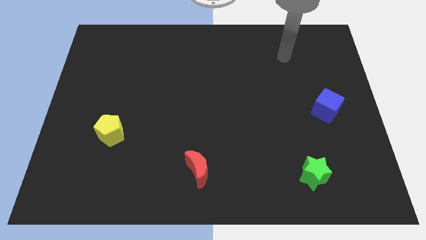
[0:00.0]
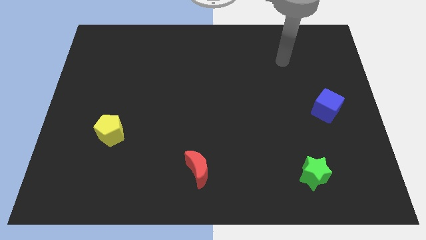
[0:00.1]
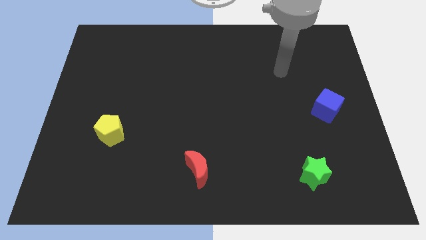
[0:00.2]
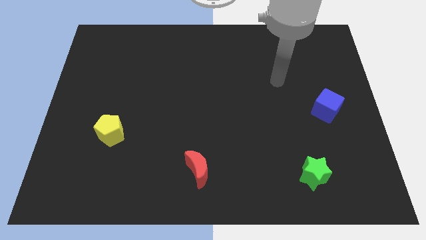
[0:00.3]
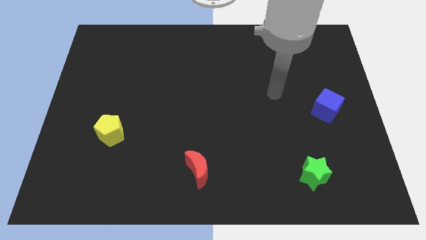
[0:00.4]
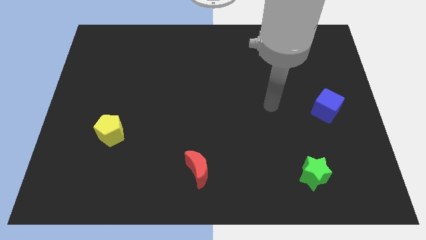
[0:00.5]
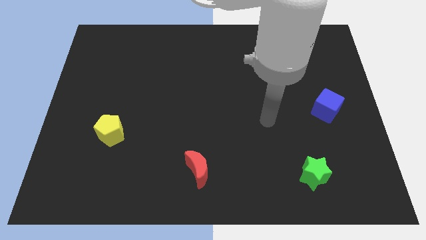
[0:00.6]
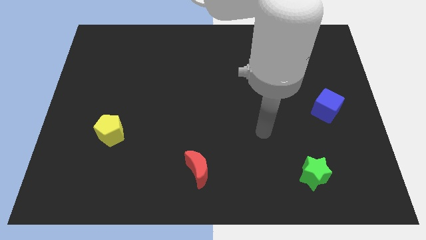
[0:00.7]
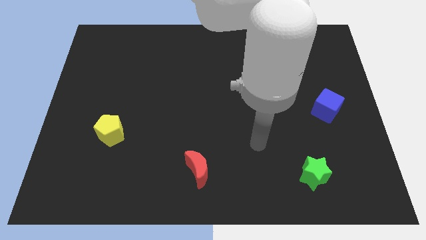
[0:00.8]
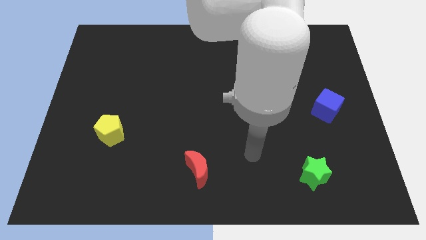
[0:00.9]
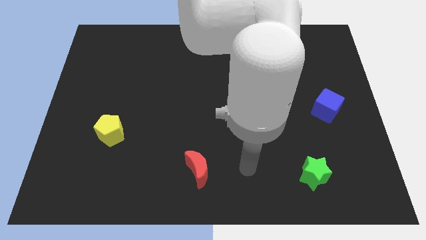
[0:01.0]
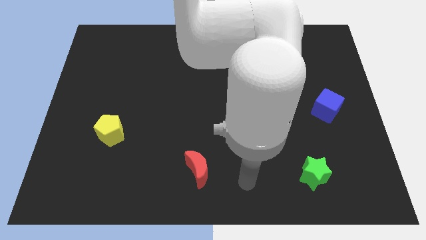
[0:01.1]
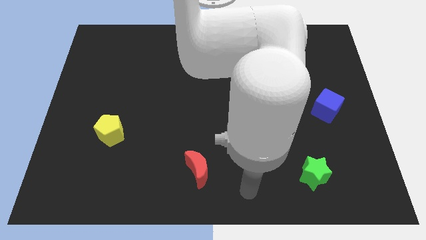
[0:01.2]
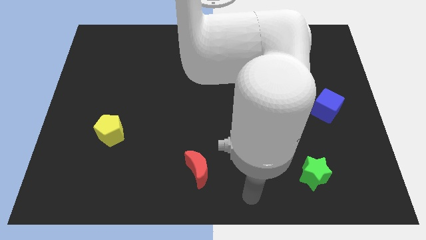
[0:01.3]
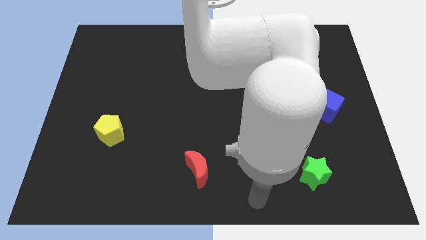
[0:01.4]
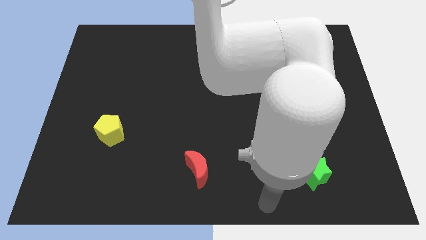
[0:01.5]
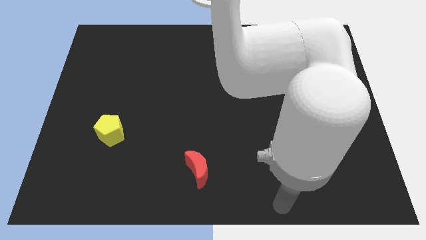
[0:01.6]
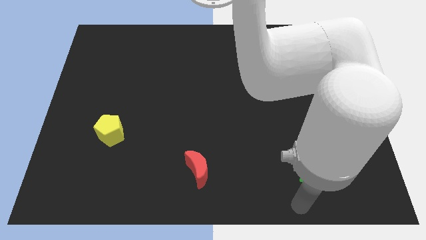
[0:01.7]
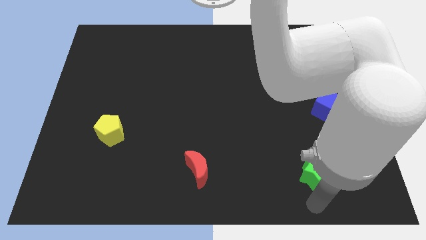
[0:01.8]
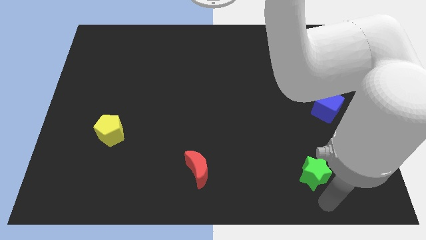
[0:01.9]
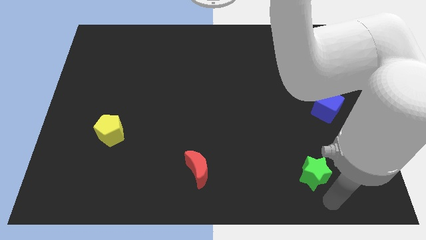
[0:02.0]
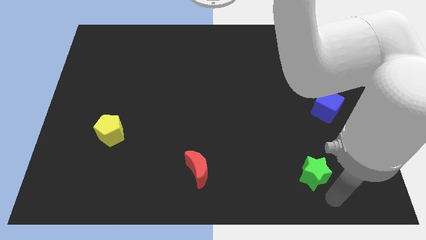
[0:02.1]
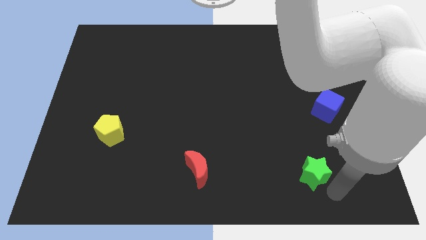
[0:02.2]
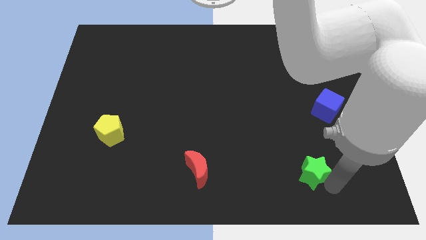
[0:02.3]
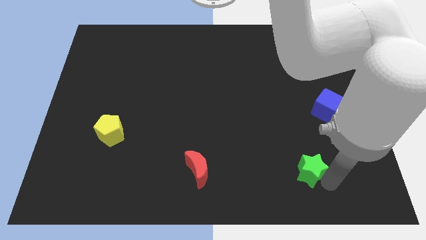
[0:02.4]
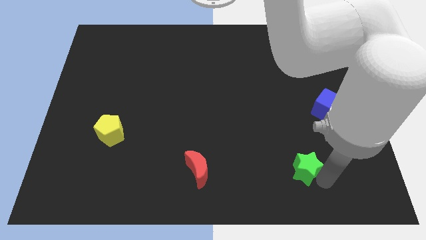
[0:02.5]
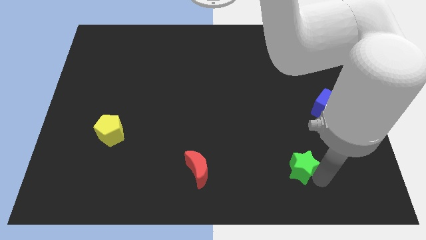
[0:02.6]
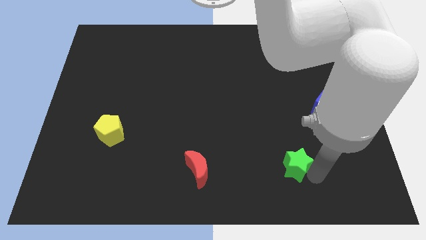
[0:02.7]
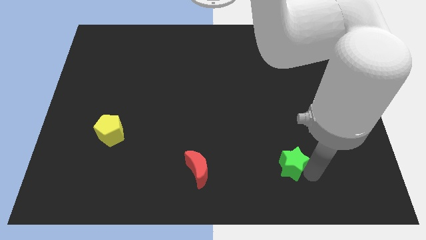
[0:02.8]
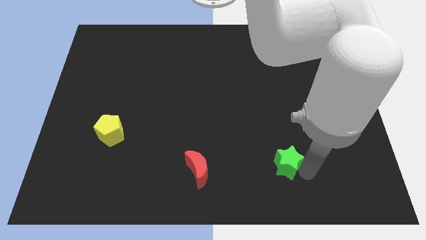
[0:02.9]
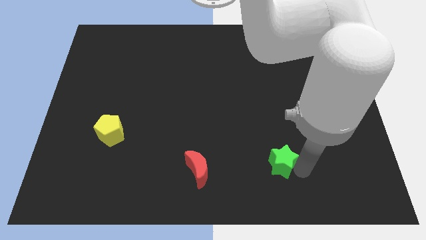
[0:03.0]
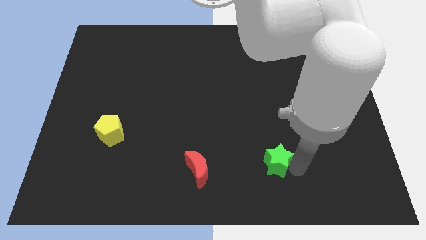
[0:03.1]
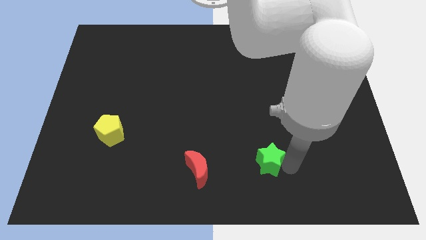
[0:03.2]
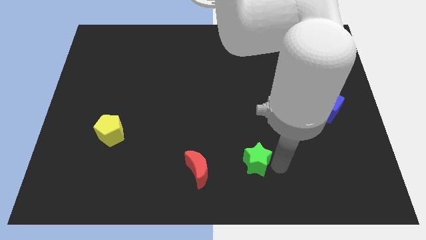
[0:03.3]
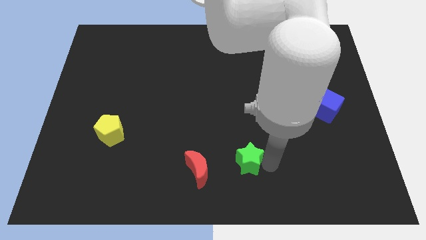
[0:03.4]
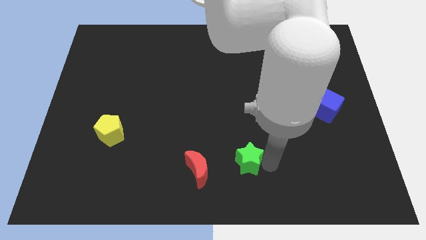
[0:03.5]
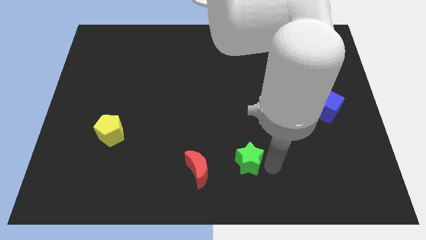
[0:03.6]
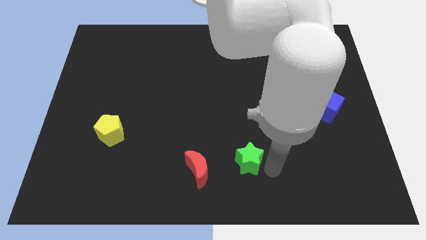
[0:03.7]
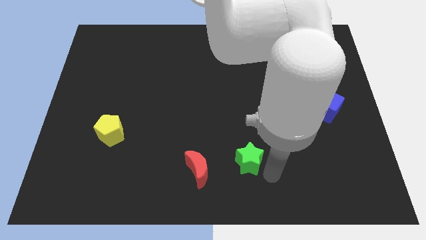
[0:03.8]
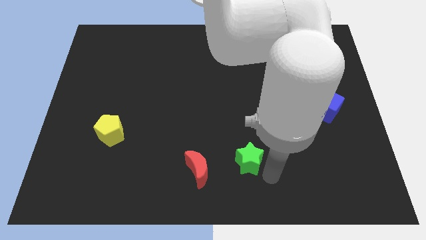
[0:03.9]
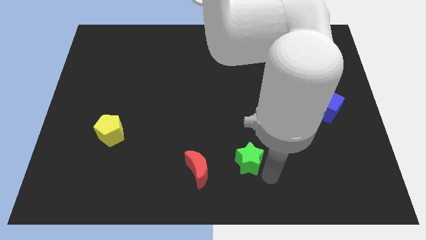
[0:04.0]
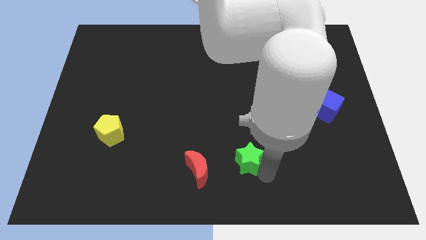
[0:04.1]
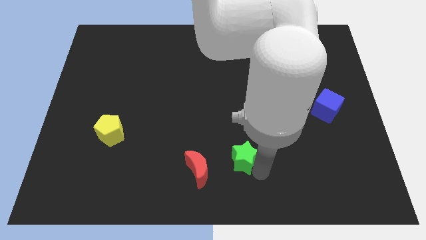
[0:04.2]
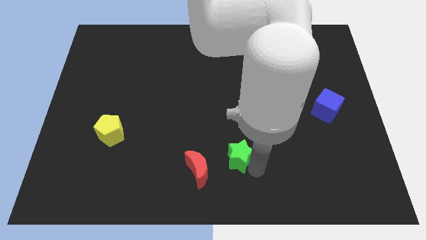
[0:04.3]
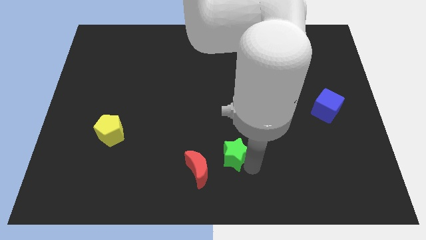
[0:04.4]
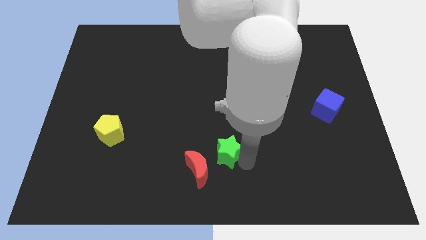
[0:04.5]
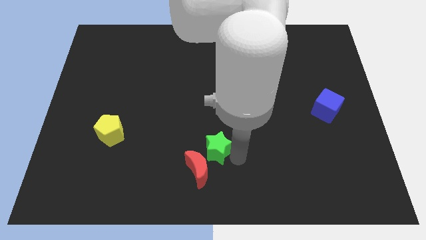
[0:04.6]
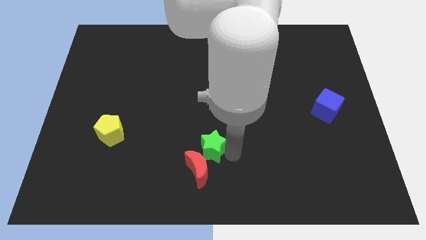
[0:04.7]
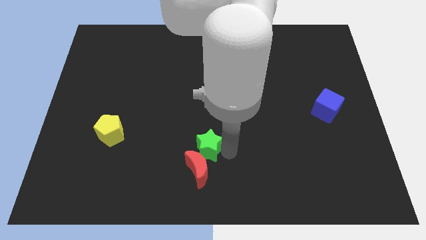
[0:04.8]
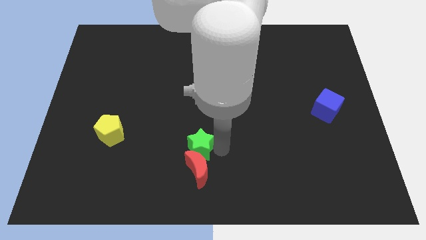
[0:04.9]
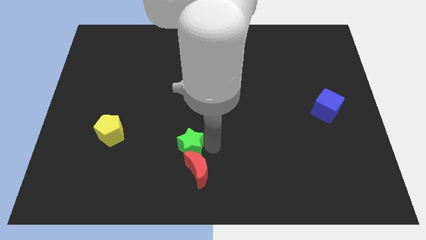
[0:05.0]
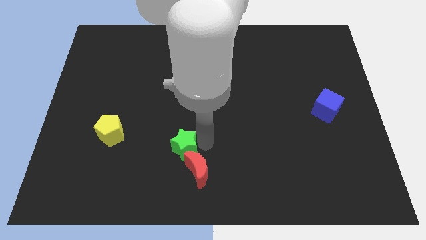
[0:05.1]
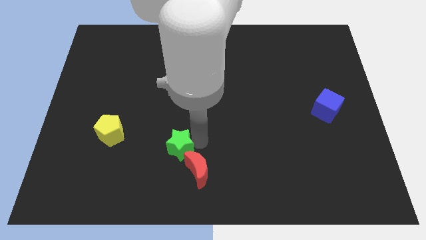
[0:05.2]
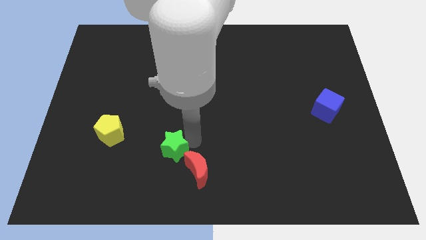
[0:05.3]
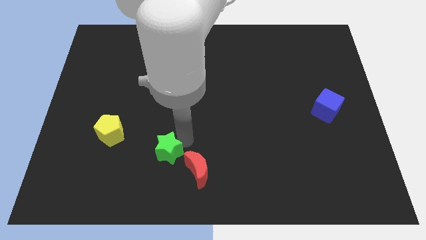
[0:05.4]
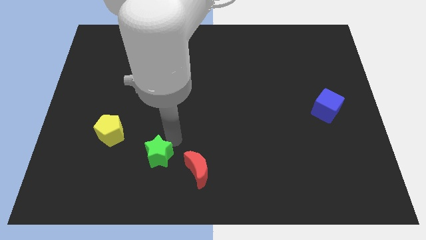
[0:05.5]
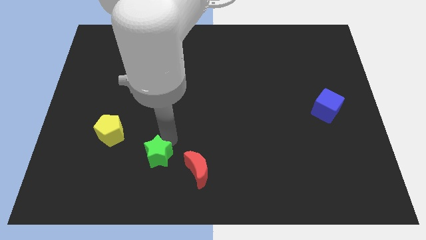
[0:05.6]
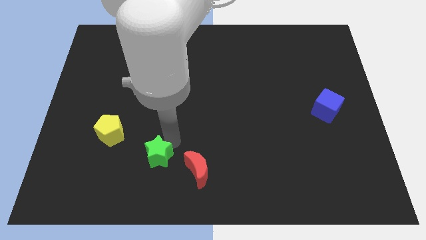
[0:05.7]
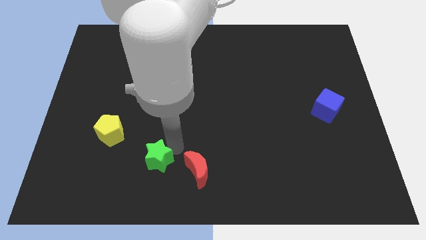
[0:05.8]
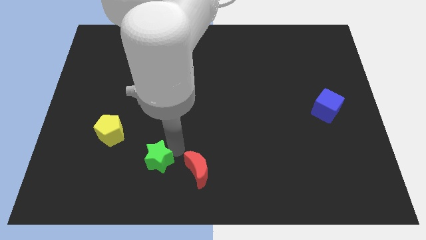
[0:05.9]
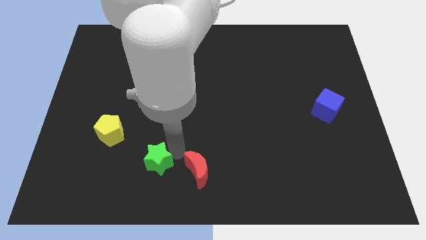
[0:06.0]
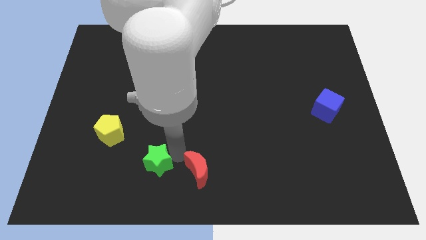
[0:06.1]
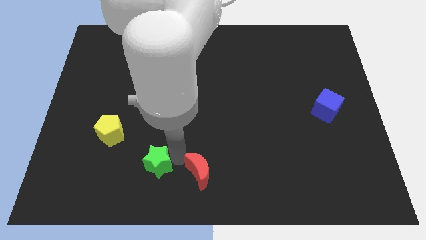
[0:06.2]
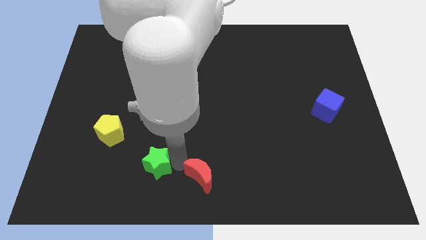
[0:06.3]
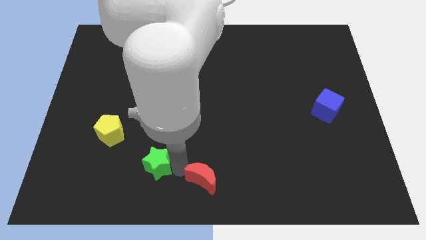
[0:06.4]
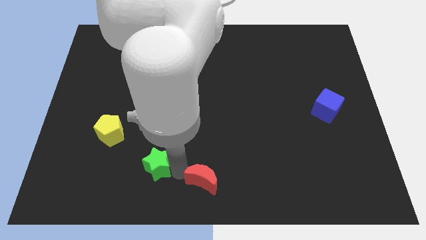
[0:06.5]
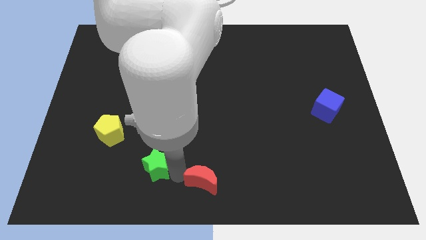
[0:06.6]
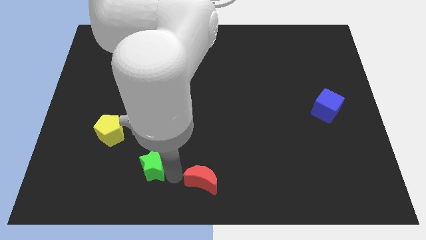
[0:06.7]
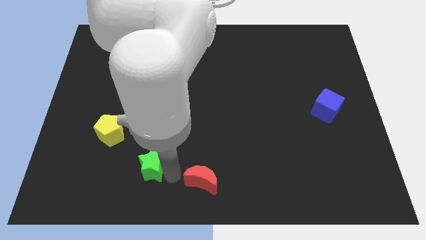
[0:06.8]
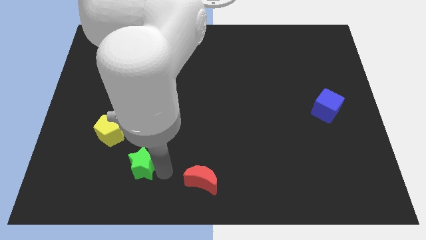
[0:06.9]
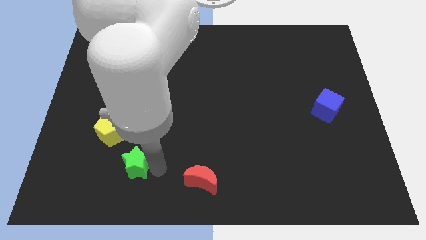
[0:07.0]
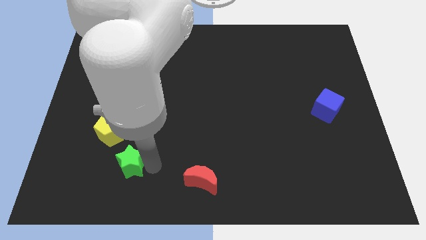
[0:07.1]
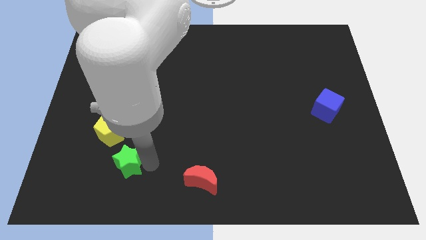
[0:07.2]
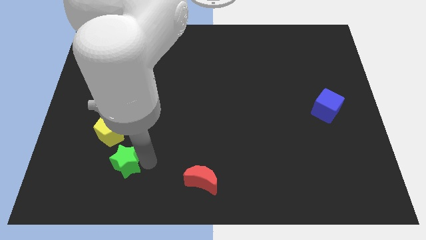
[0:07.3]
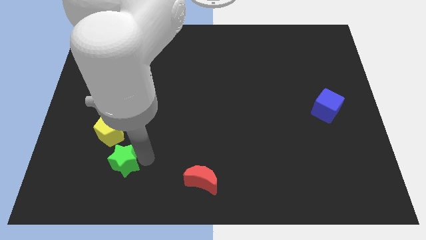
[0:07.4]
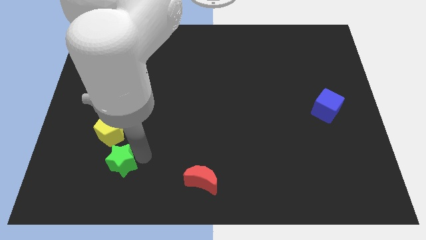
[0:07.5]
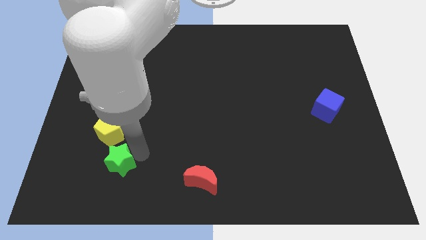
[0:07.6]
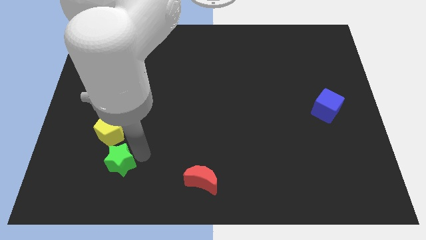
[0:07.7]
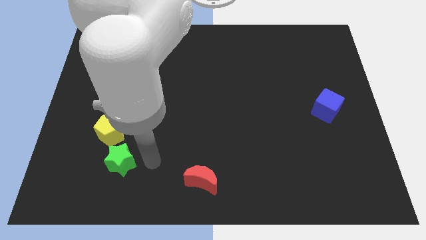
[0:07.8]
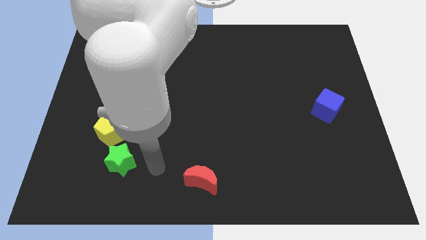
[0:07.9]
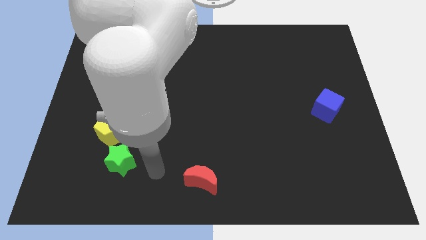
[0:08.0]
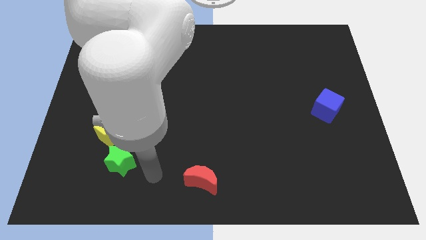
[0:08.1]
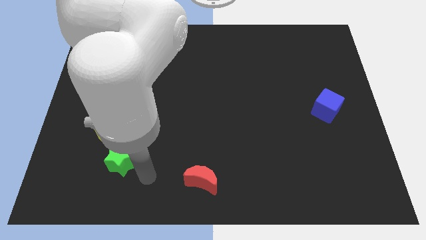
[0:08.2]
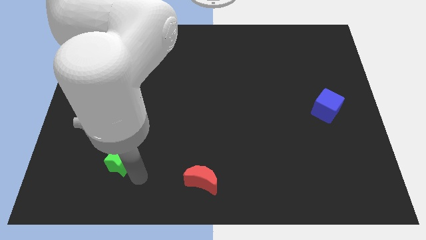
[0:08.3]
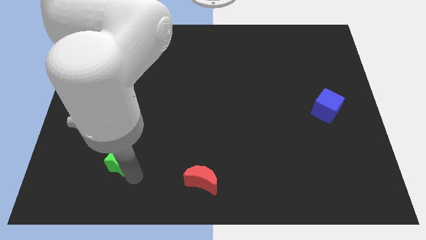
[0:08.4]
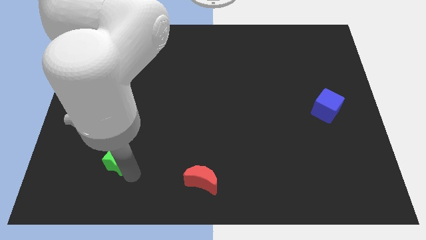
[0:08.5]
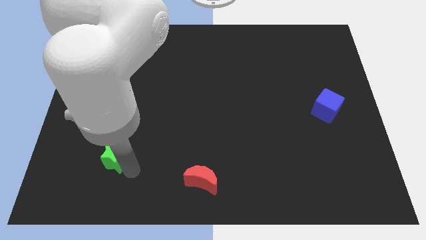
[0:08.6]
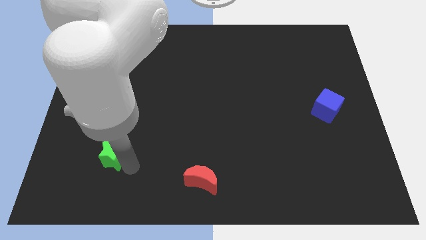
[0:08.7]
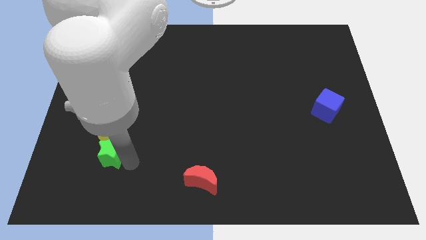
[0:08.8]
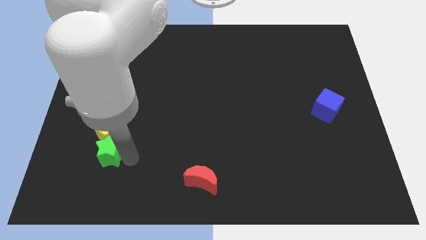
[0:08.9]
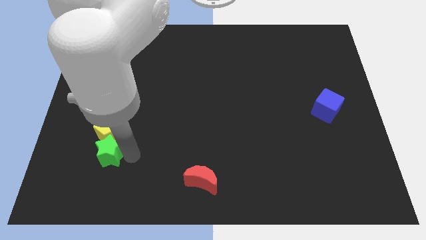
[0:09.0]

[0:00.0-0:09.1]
slide the green block towards the yellow pentagon
